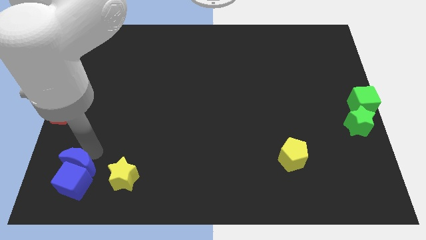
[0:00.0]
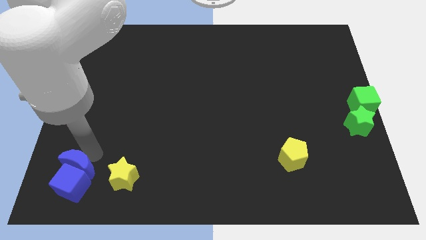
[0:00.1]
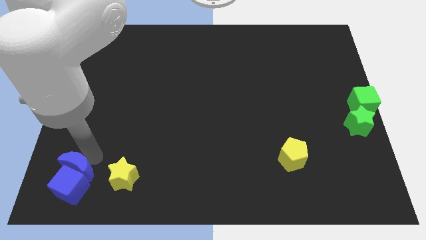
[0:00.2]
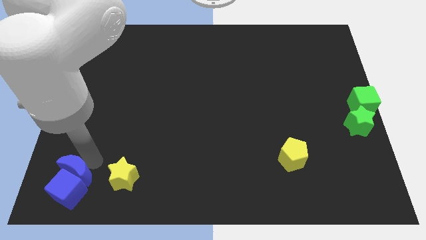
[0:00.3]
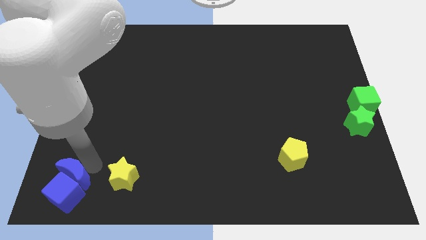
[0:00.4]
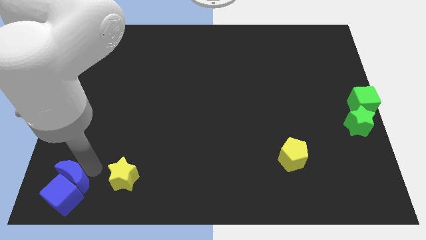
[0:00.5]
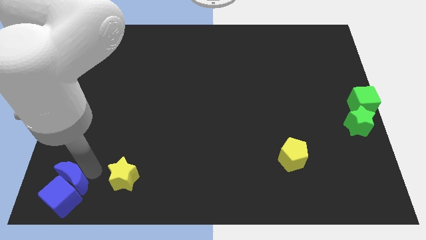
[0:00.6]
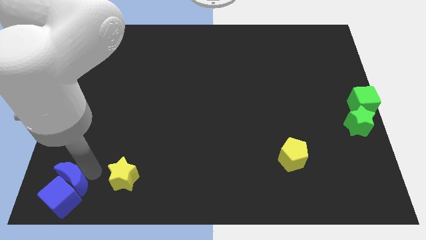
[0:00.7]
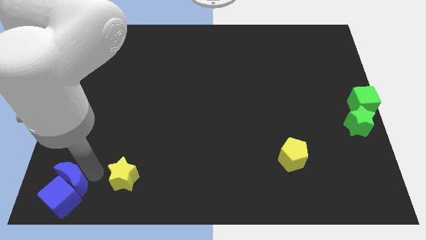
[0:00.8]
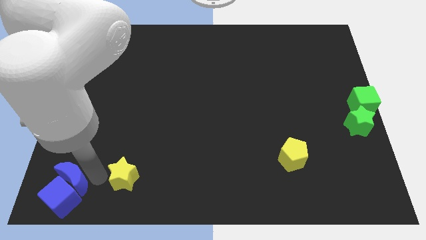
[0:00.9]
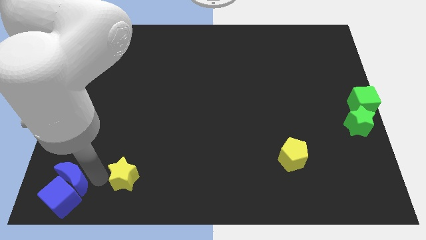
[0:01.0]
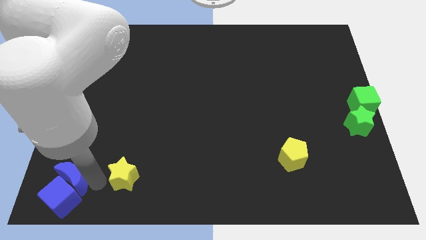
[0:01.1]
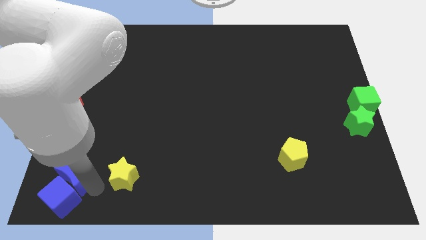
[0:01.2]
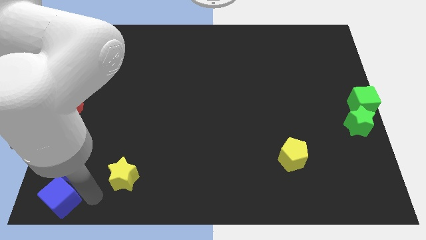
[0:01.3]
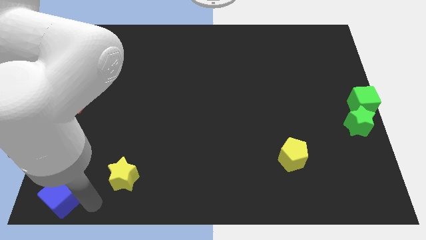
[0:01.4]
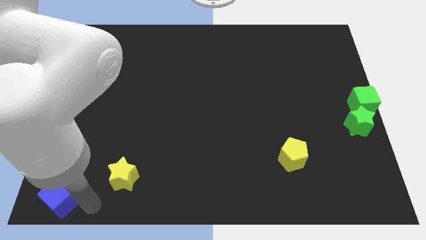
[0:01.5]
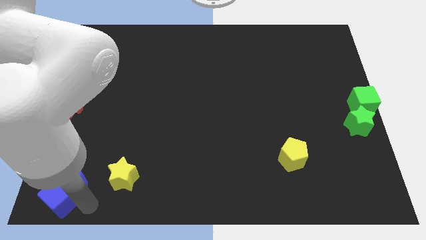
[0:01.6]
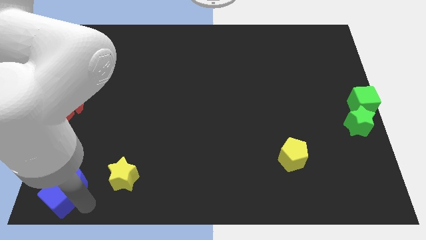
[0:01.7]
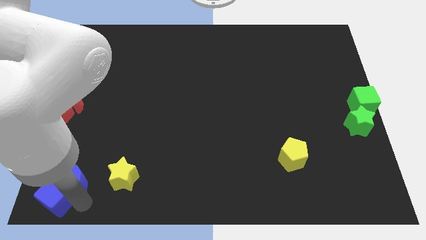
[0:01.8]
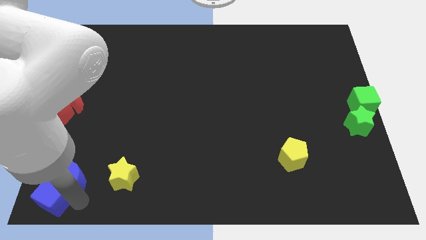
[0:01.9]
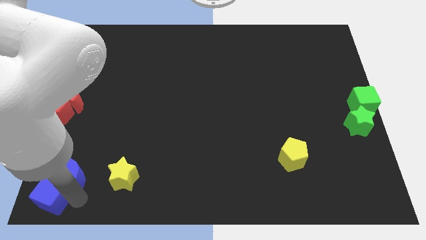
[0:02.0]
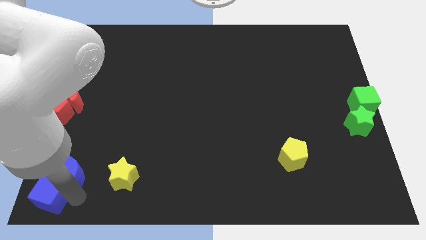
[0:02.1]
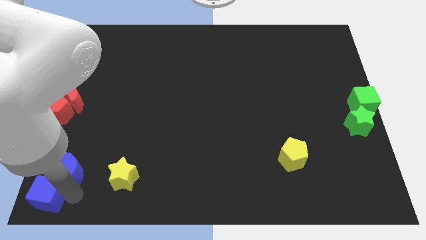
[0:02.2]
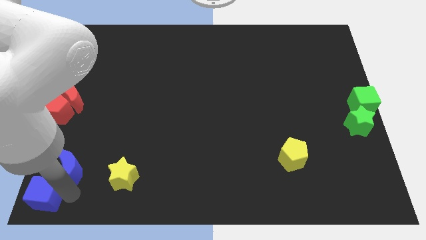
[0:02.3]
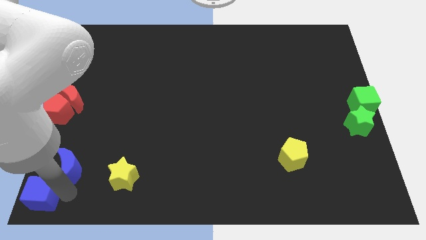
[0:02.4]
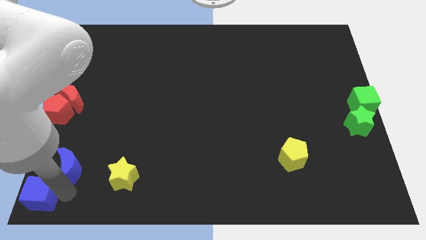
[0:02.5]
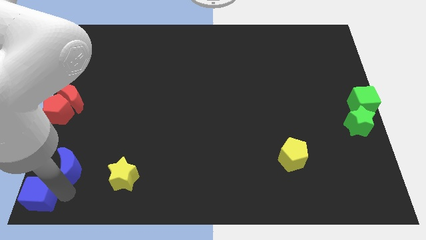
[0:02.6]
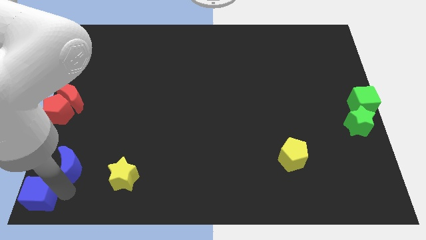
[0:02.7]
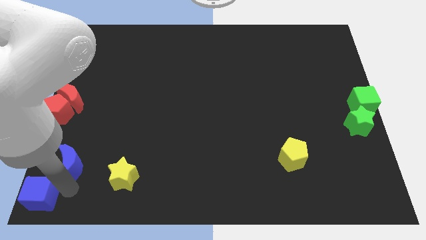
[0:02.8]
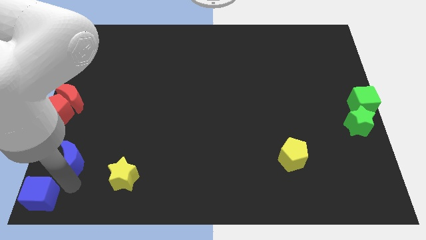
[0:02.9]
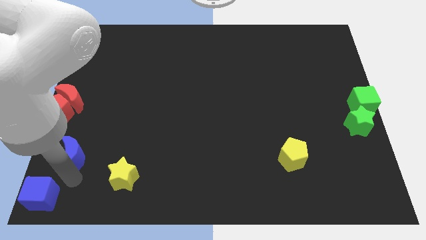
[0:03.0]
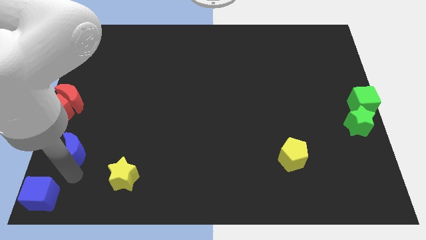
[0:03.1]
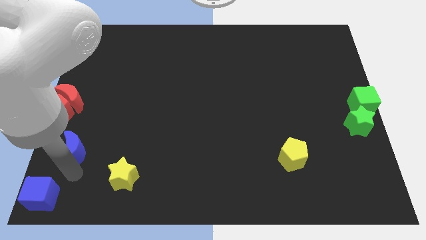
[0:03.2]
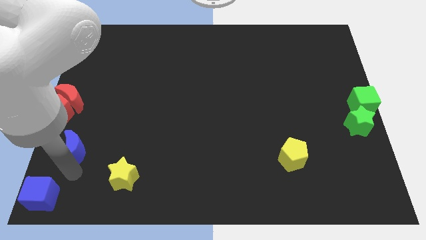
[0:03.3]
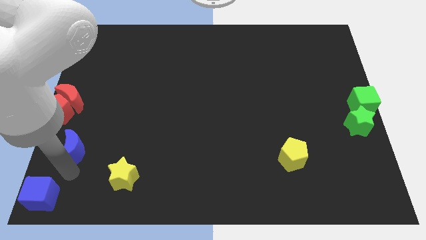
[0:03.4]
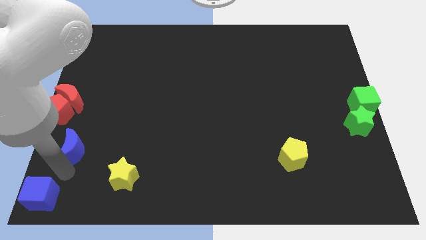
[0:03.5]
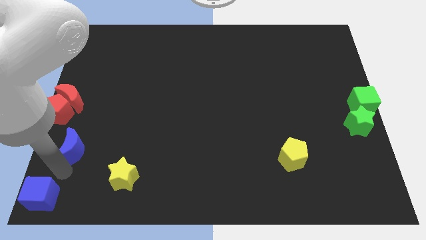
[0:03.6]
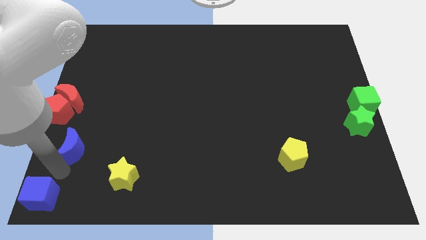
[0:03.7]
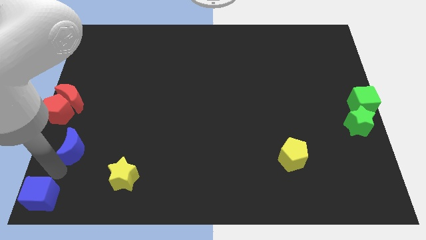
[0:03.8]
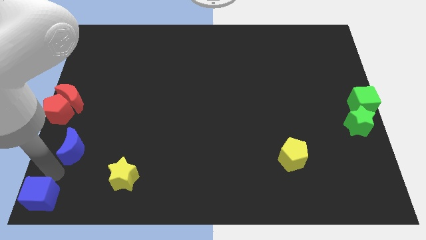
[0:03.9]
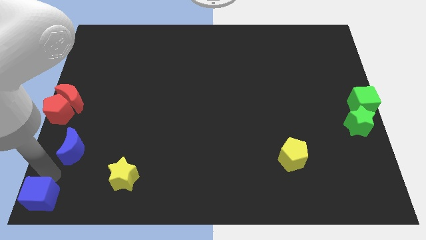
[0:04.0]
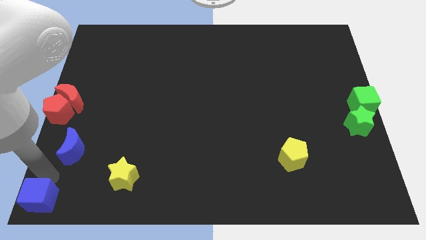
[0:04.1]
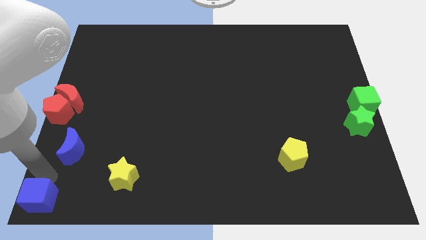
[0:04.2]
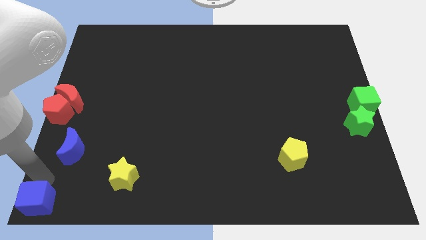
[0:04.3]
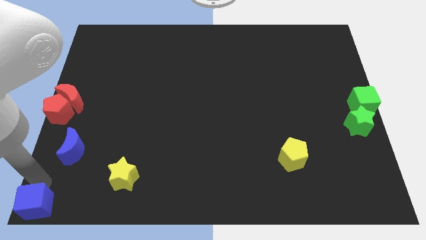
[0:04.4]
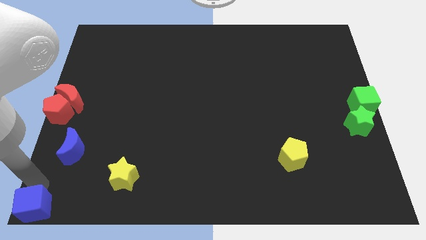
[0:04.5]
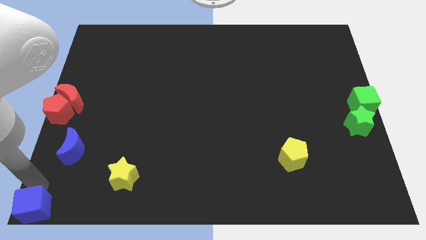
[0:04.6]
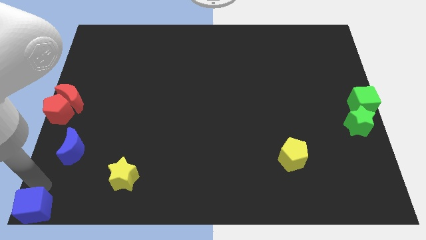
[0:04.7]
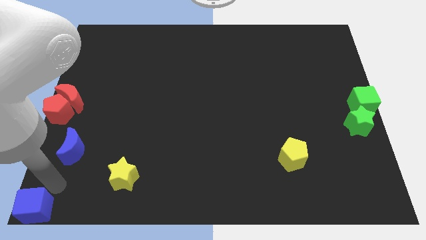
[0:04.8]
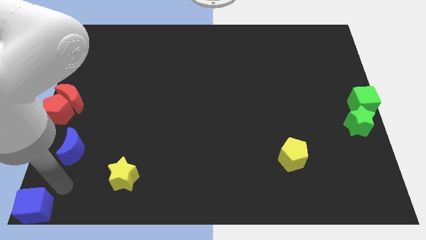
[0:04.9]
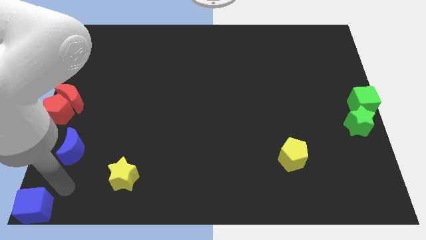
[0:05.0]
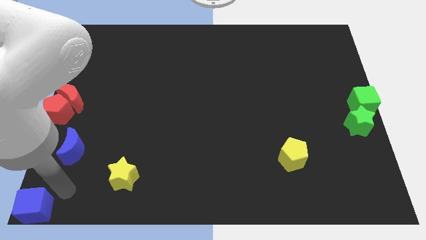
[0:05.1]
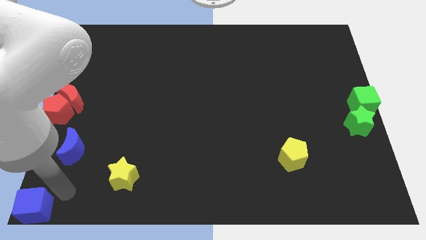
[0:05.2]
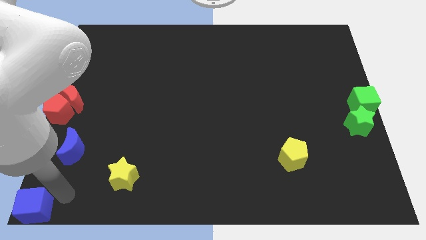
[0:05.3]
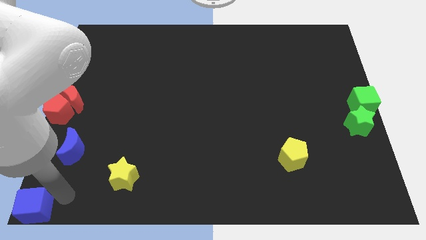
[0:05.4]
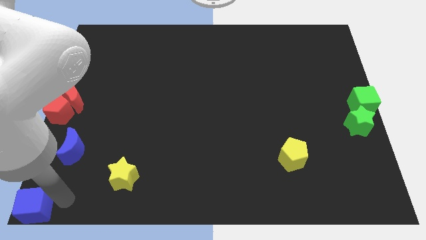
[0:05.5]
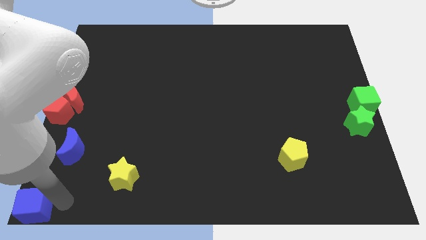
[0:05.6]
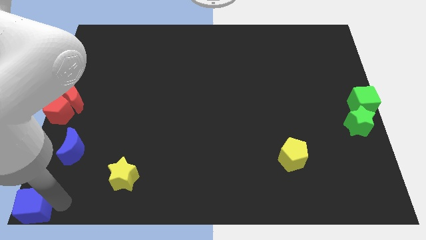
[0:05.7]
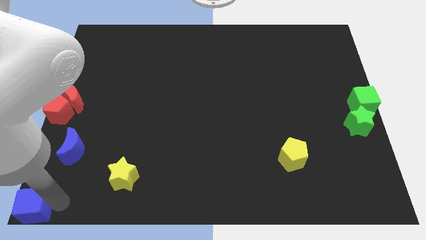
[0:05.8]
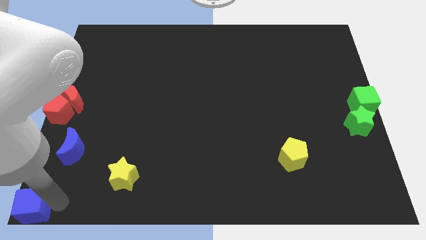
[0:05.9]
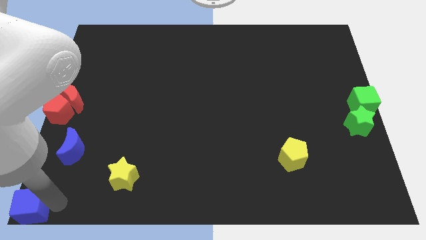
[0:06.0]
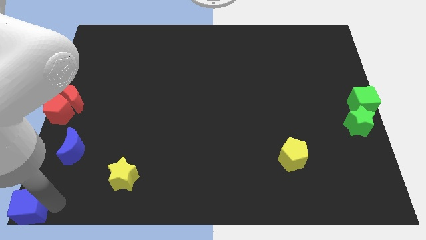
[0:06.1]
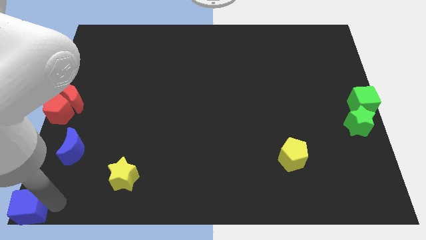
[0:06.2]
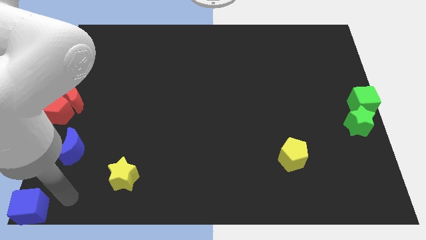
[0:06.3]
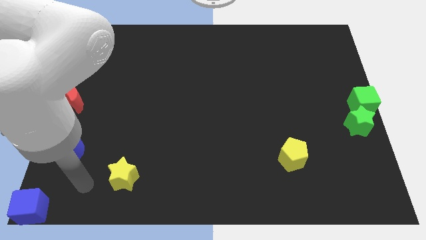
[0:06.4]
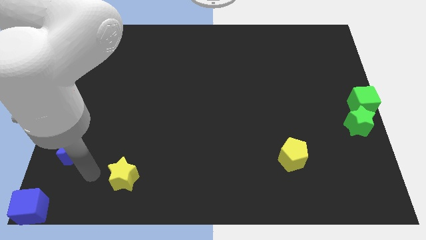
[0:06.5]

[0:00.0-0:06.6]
move the blue cube to the bottom left corner of the board

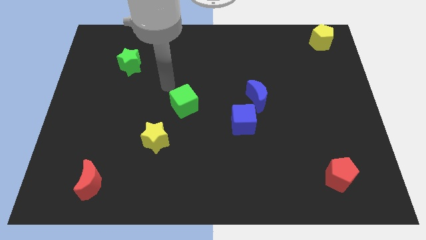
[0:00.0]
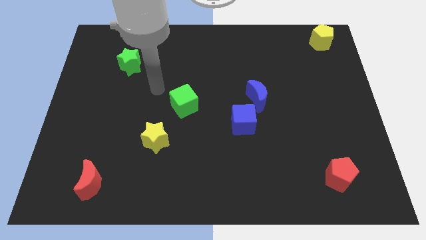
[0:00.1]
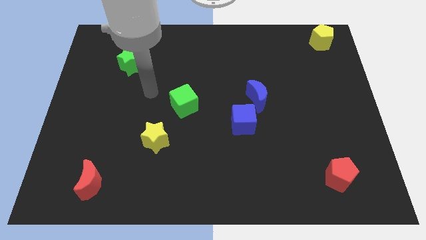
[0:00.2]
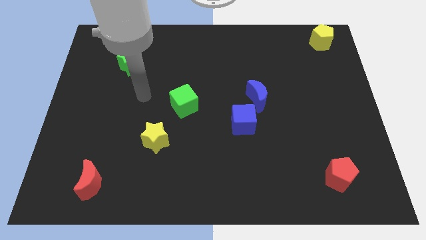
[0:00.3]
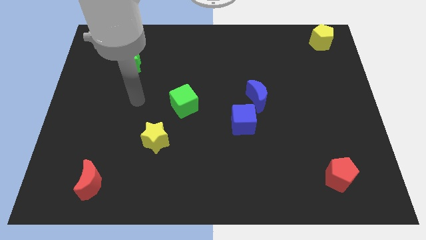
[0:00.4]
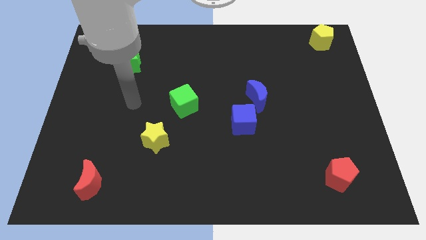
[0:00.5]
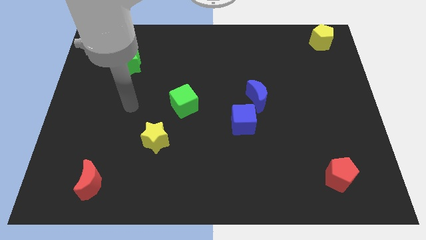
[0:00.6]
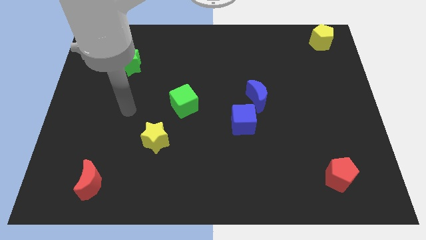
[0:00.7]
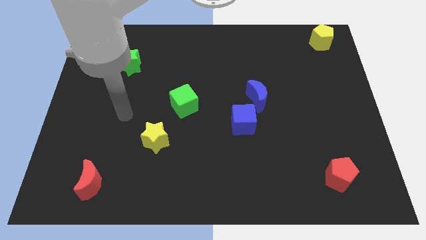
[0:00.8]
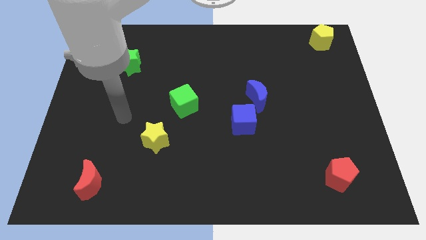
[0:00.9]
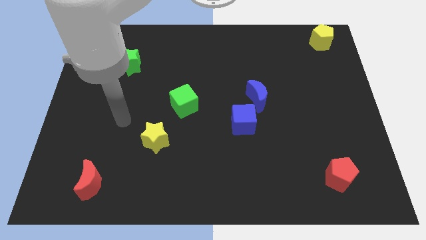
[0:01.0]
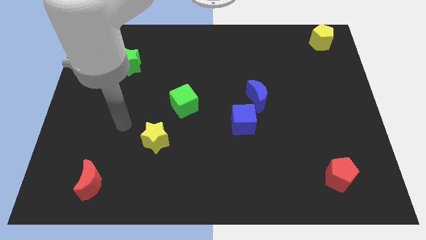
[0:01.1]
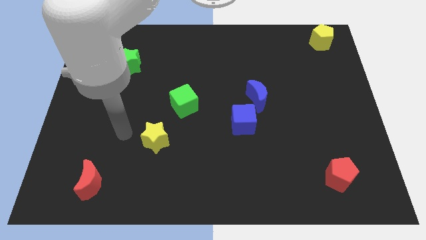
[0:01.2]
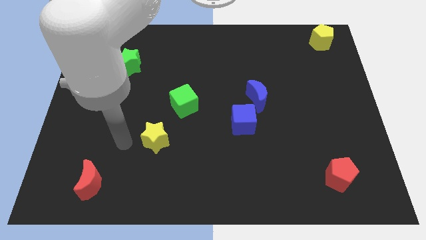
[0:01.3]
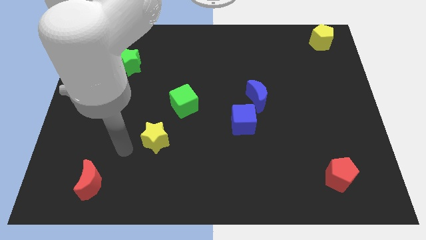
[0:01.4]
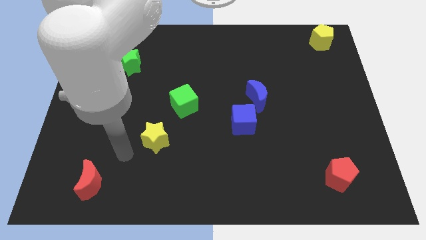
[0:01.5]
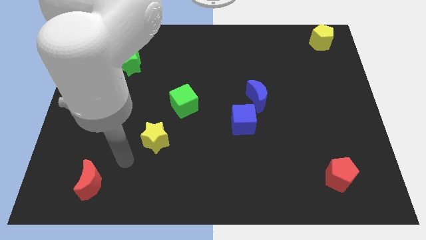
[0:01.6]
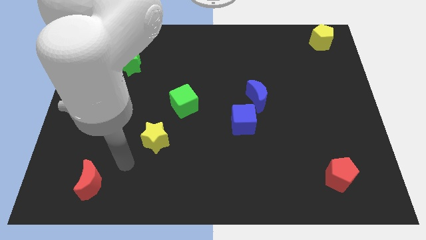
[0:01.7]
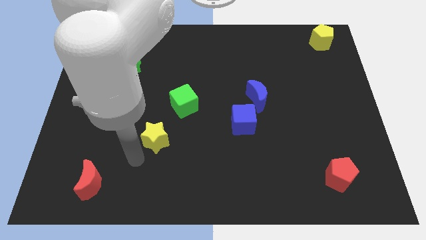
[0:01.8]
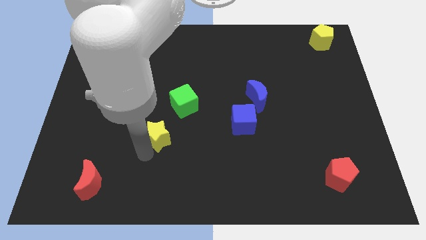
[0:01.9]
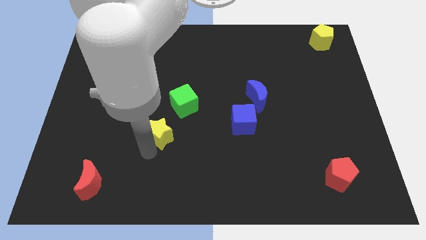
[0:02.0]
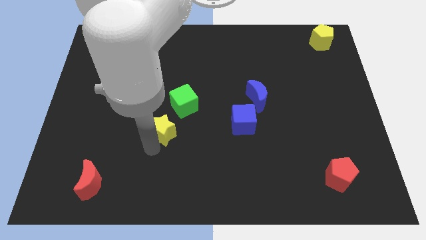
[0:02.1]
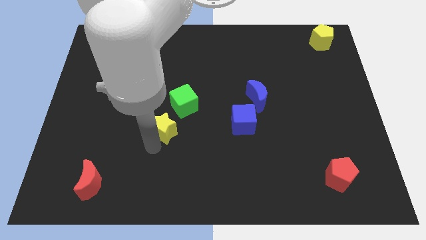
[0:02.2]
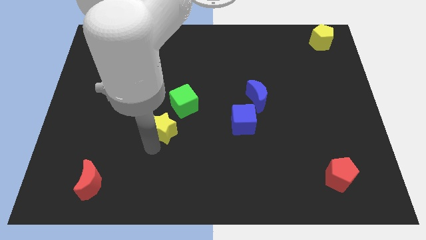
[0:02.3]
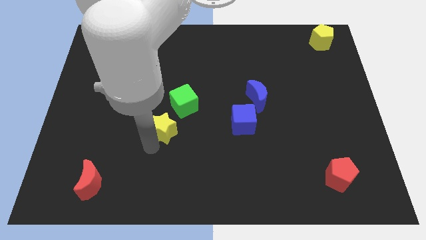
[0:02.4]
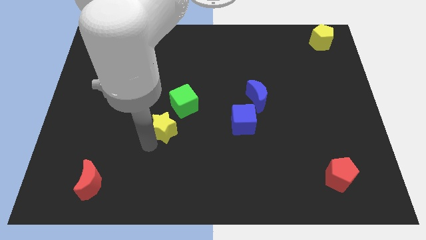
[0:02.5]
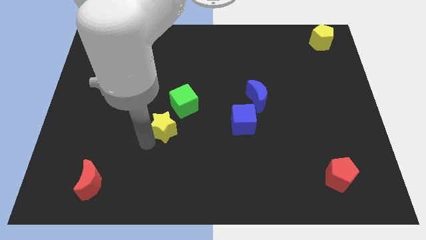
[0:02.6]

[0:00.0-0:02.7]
push yellow star to the bottom left of green cube
